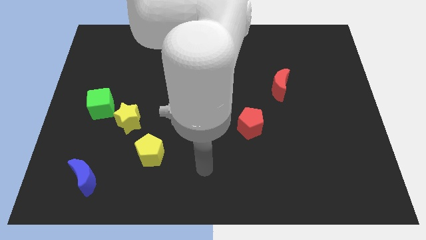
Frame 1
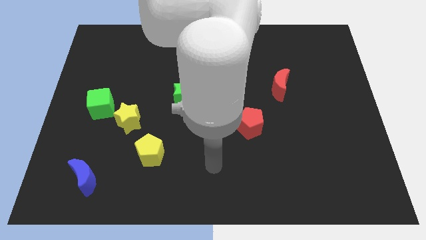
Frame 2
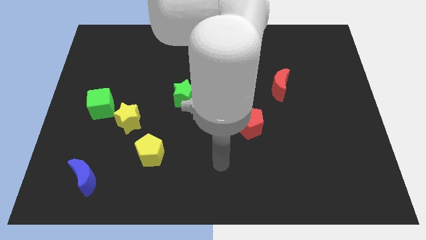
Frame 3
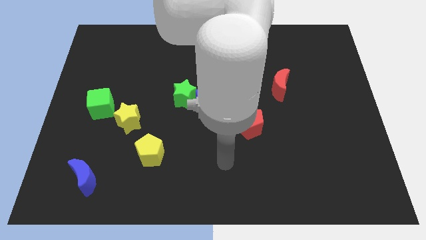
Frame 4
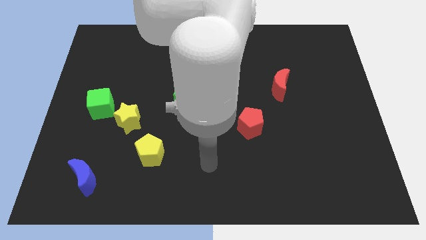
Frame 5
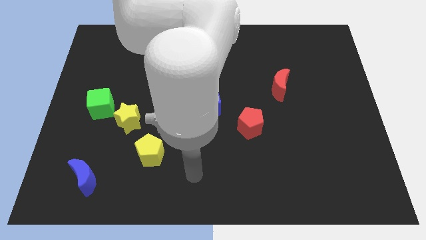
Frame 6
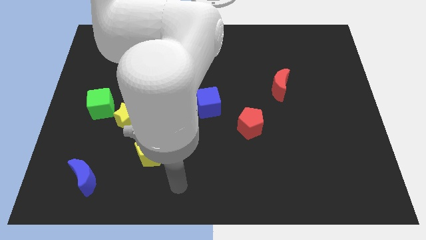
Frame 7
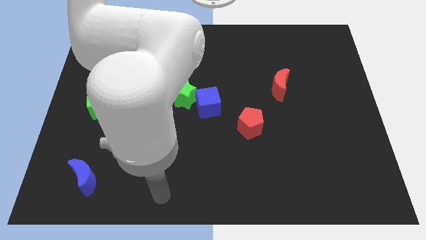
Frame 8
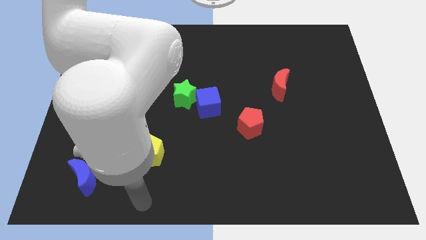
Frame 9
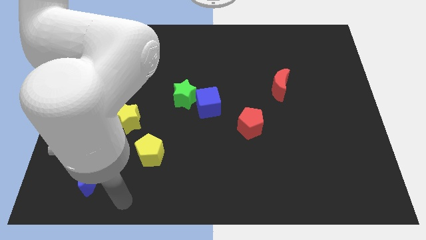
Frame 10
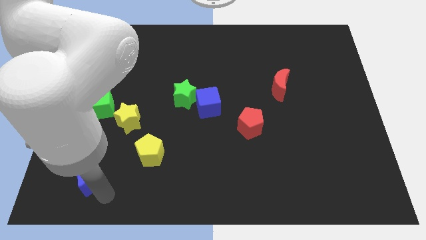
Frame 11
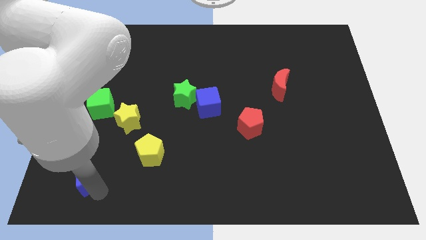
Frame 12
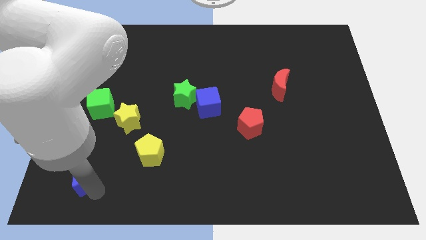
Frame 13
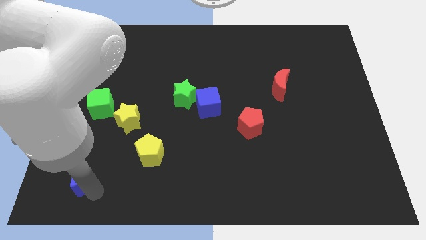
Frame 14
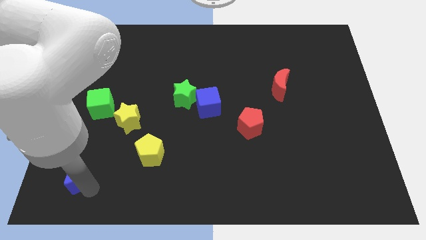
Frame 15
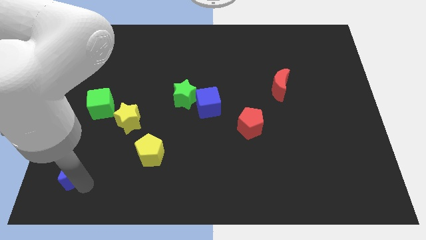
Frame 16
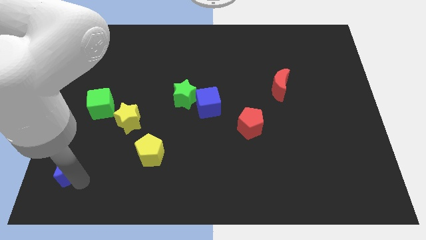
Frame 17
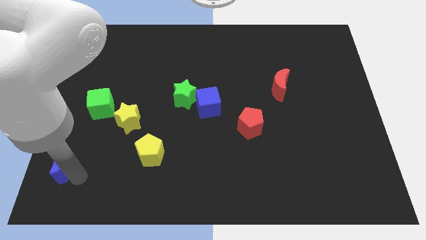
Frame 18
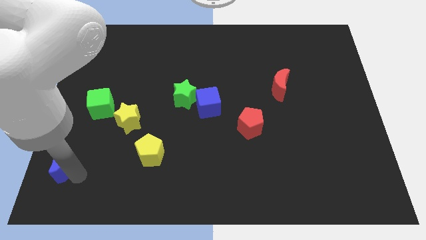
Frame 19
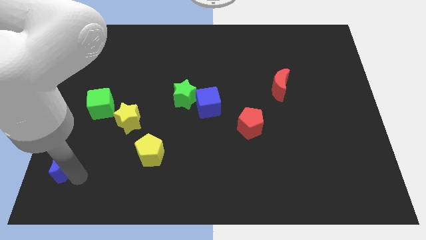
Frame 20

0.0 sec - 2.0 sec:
slightly move blue crescent towards the left side of the board

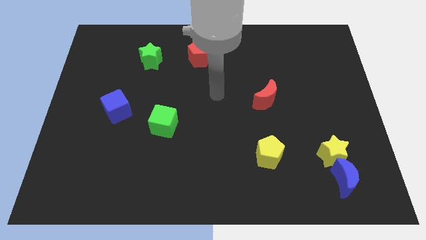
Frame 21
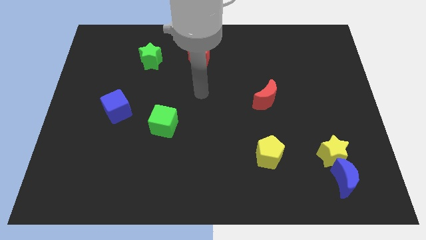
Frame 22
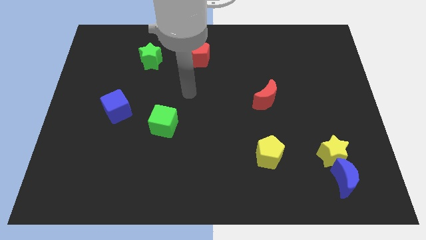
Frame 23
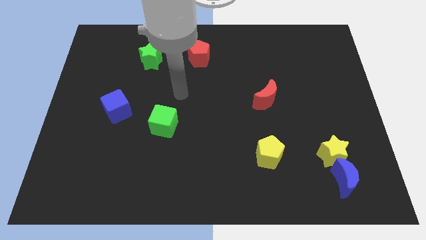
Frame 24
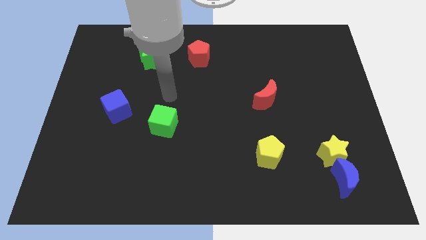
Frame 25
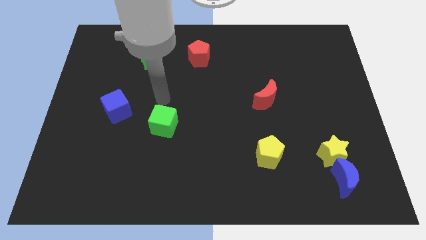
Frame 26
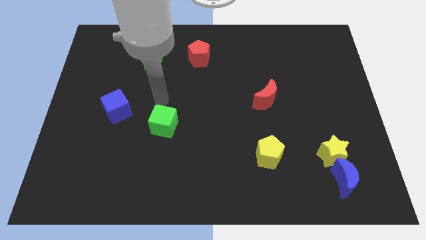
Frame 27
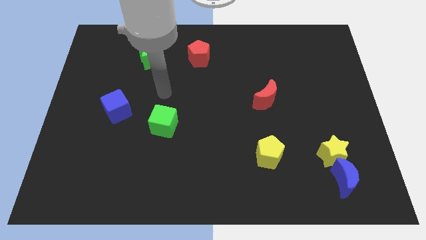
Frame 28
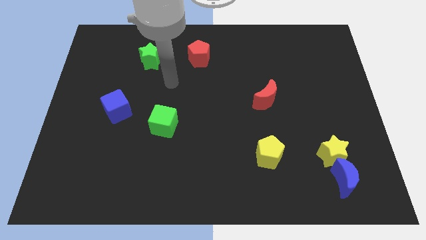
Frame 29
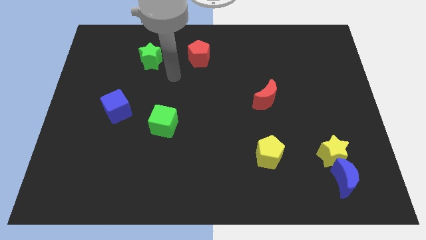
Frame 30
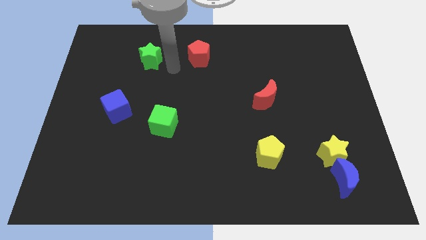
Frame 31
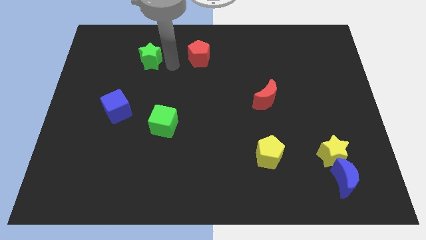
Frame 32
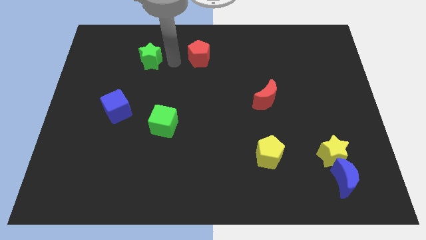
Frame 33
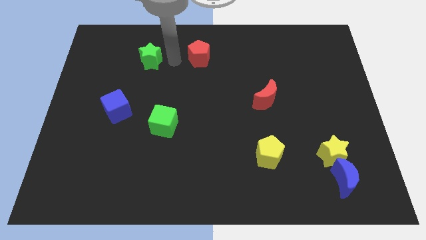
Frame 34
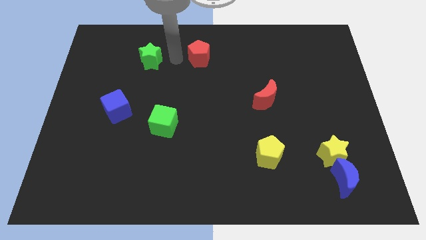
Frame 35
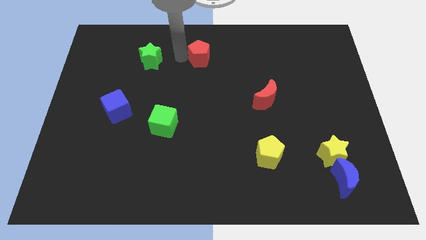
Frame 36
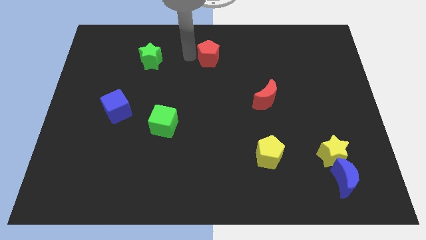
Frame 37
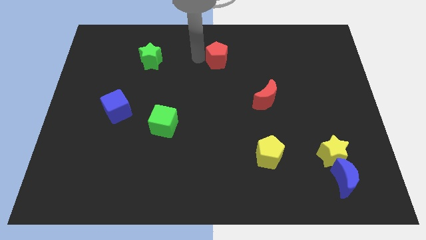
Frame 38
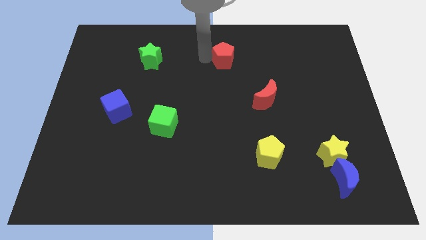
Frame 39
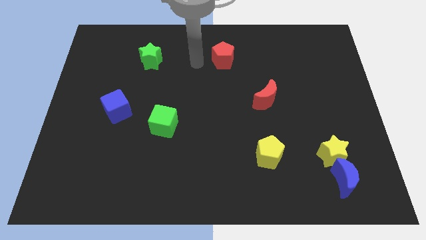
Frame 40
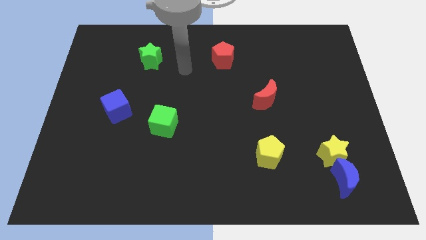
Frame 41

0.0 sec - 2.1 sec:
move the red pentagon slightly to the right

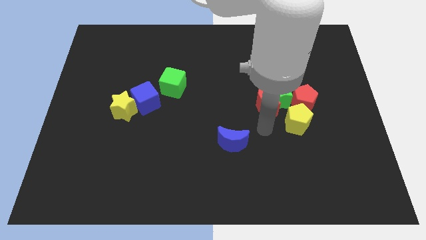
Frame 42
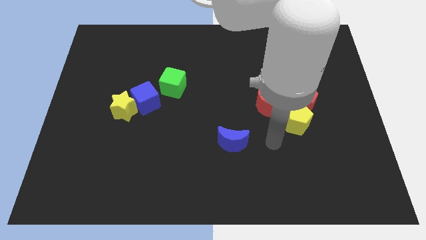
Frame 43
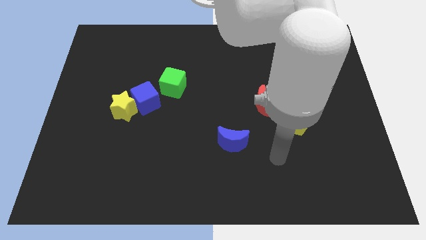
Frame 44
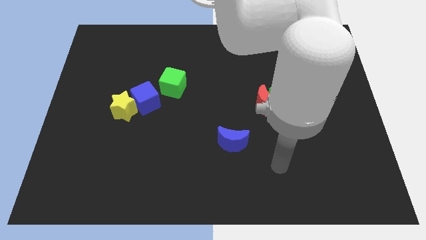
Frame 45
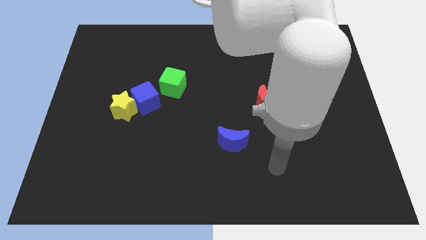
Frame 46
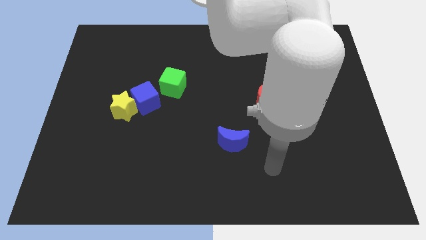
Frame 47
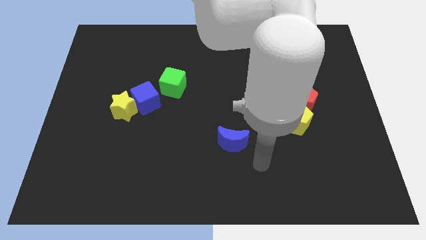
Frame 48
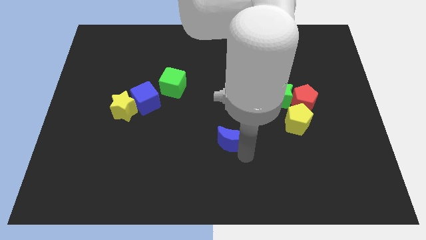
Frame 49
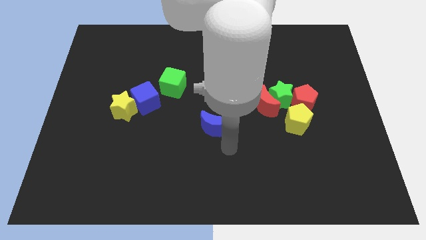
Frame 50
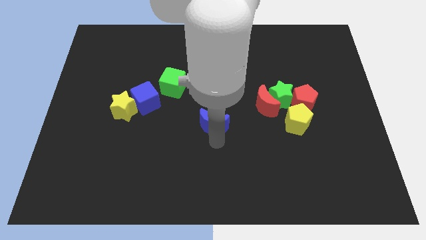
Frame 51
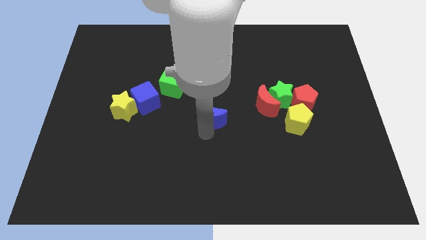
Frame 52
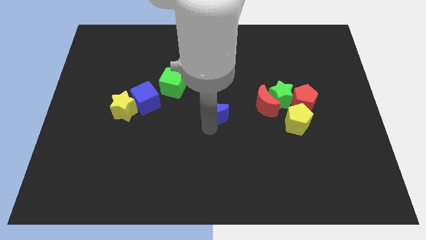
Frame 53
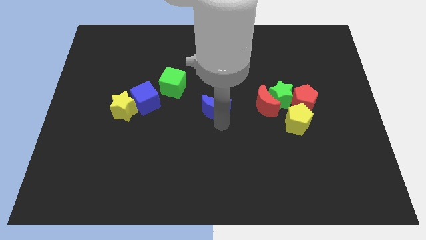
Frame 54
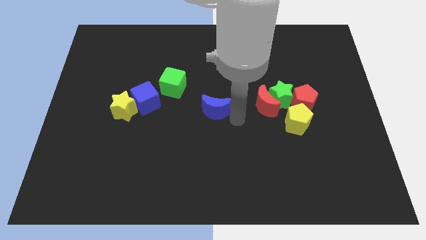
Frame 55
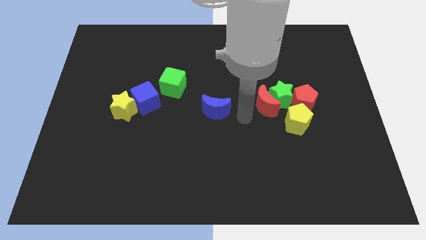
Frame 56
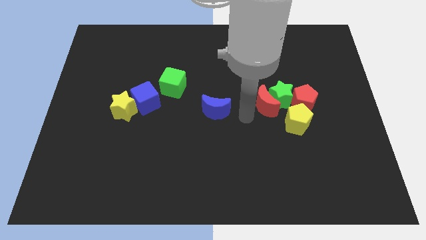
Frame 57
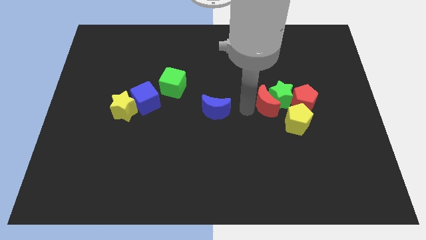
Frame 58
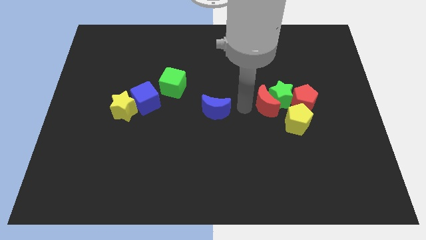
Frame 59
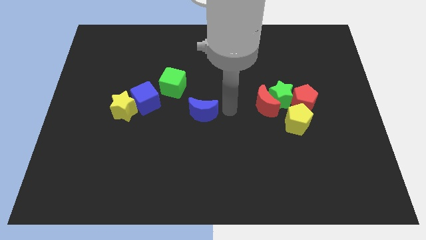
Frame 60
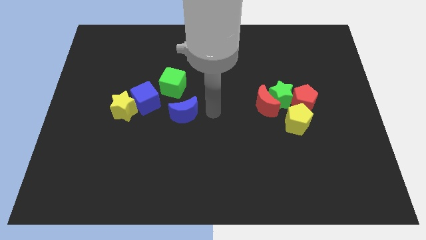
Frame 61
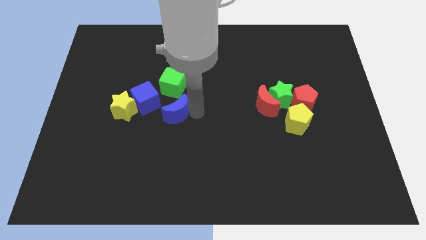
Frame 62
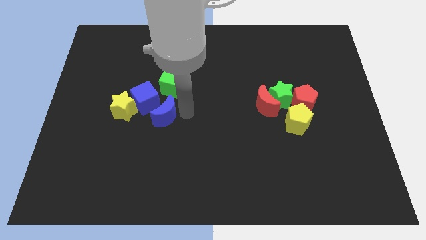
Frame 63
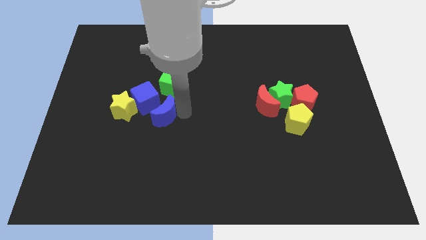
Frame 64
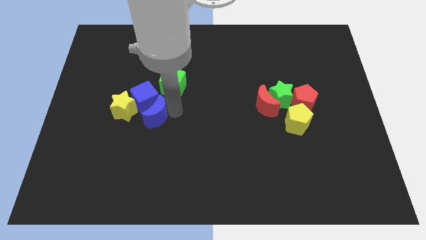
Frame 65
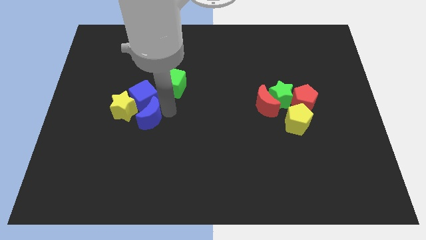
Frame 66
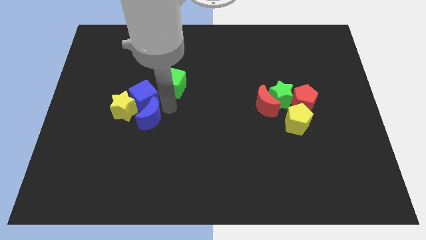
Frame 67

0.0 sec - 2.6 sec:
push the blue crescent to the right of the blue cube

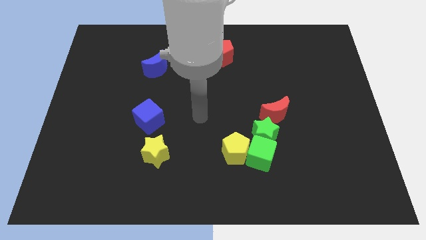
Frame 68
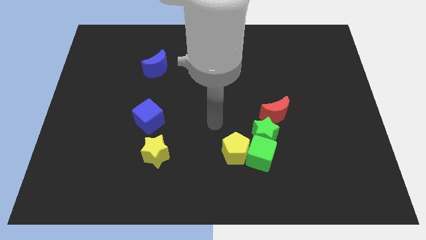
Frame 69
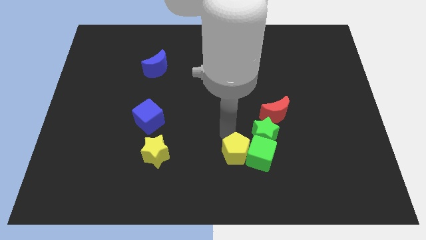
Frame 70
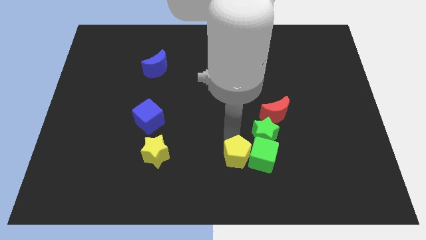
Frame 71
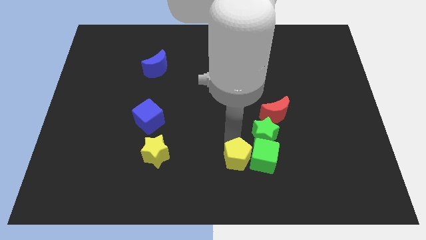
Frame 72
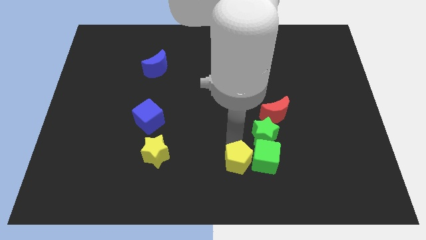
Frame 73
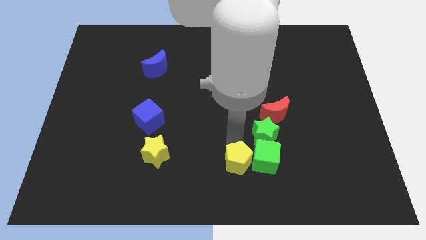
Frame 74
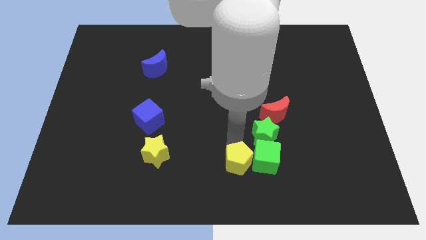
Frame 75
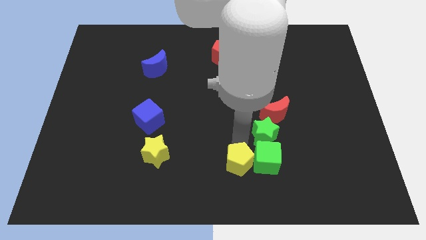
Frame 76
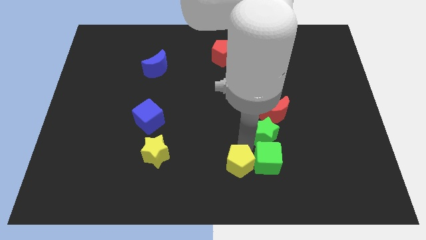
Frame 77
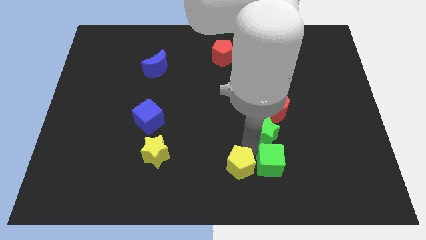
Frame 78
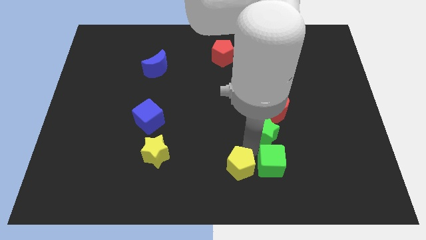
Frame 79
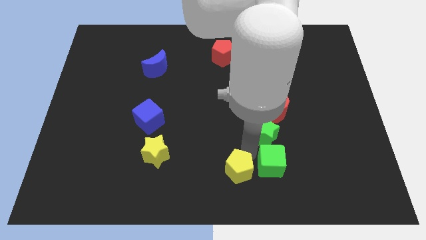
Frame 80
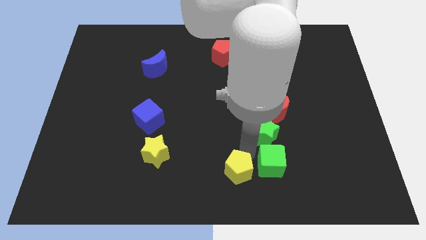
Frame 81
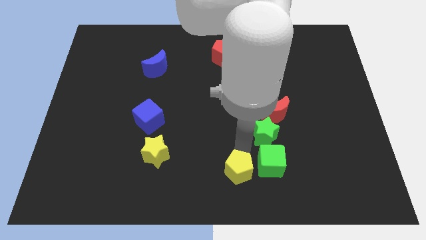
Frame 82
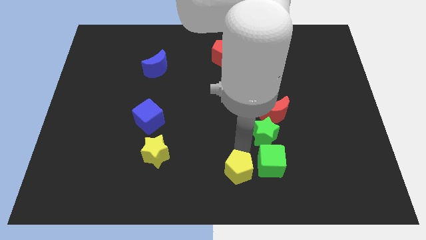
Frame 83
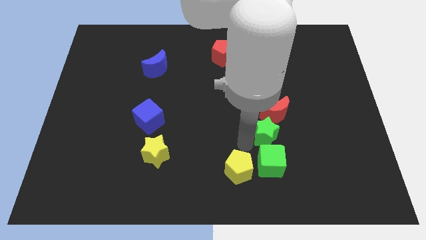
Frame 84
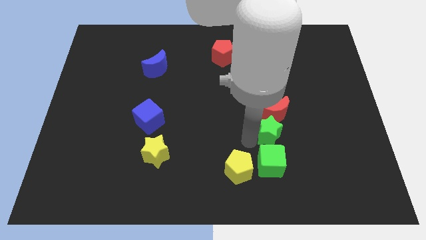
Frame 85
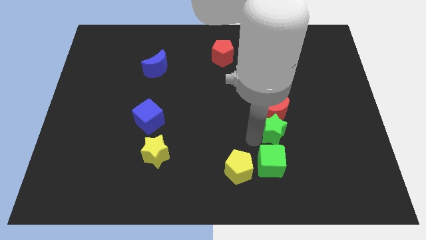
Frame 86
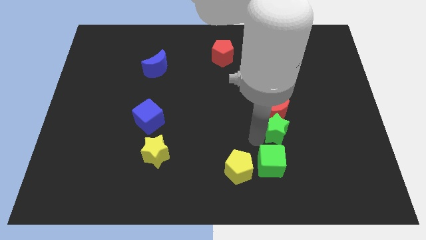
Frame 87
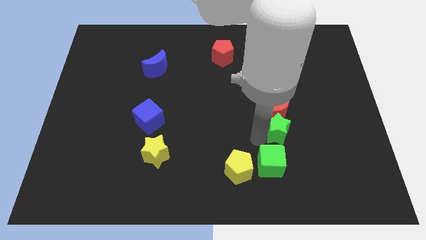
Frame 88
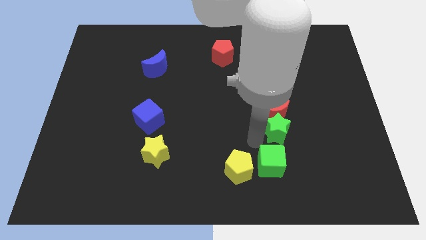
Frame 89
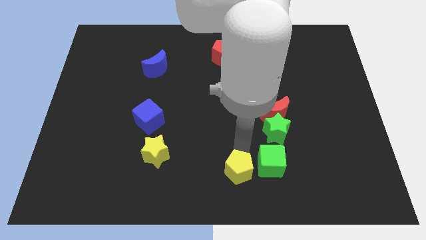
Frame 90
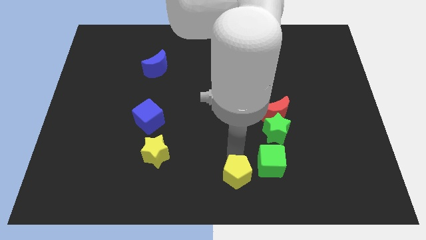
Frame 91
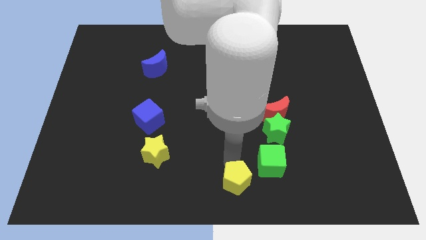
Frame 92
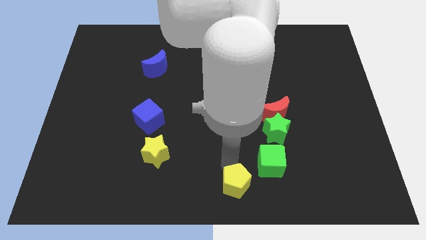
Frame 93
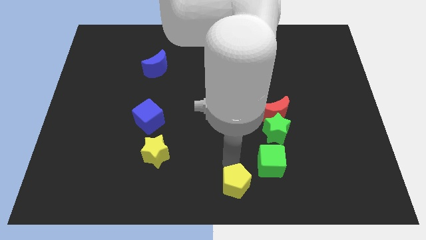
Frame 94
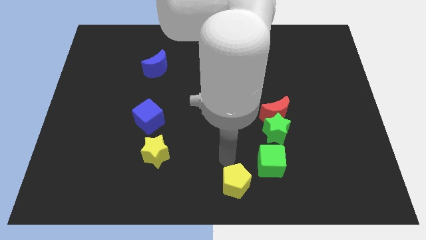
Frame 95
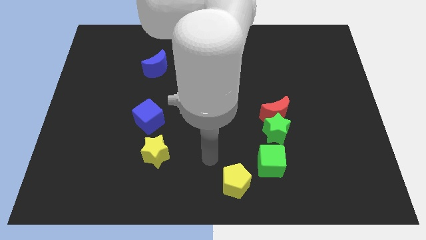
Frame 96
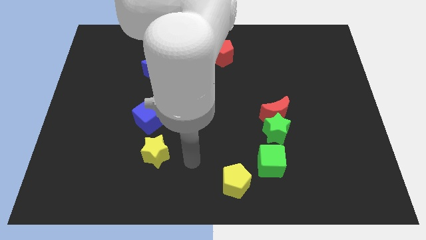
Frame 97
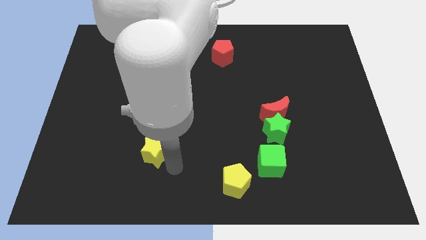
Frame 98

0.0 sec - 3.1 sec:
separate yellow pentagon from the green cube
